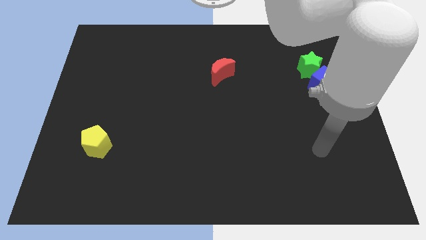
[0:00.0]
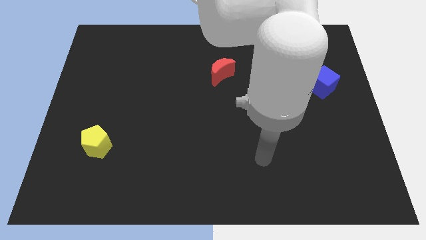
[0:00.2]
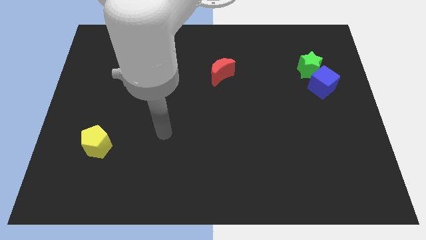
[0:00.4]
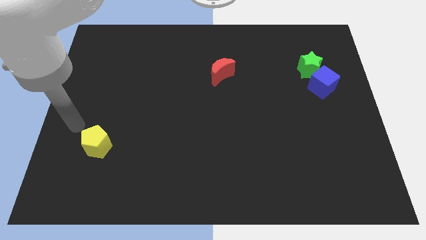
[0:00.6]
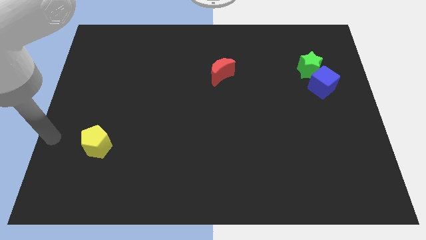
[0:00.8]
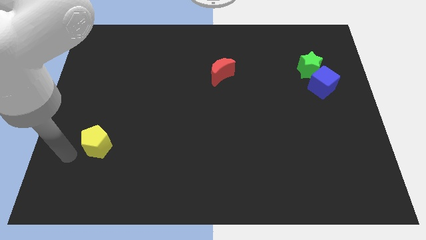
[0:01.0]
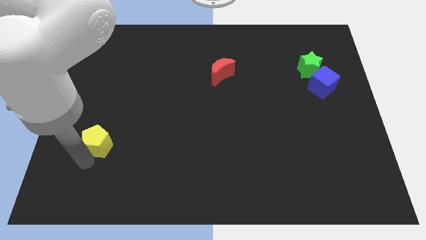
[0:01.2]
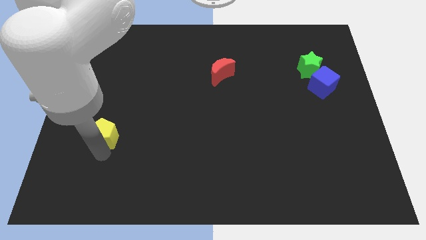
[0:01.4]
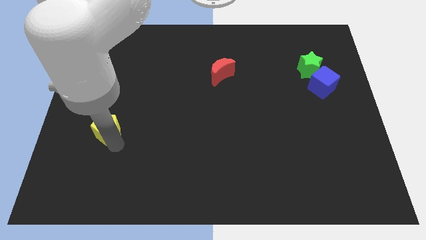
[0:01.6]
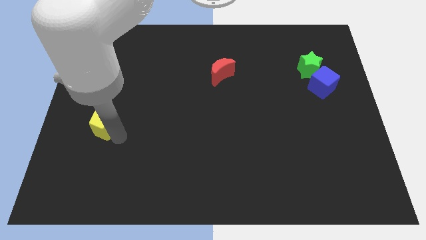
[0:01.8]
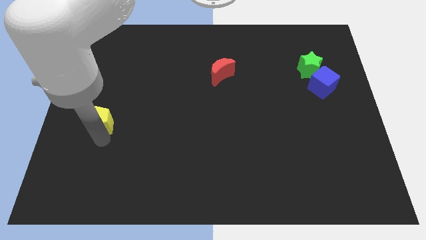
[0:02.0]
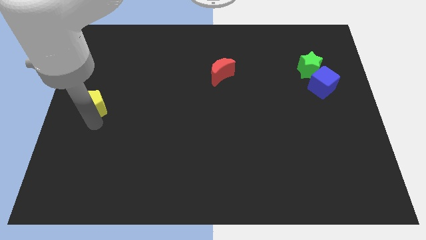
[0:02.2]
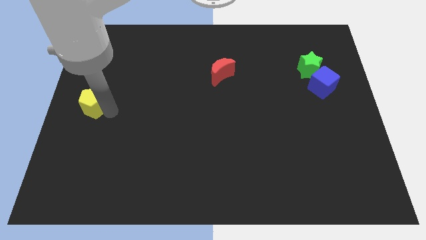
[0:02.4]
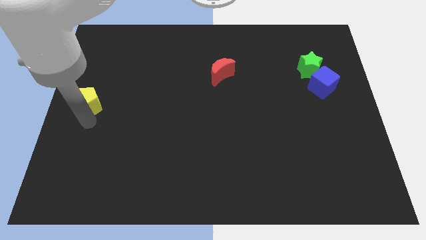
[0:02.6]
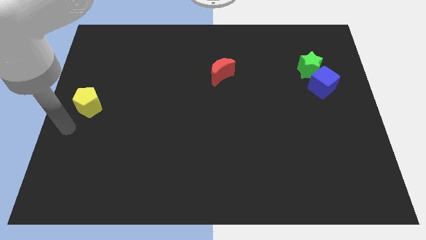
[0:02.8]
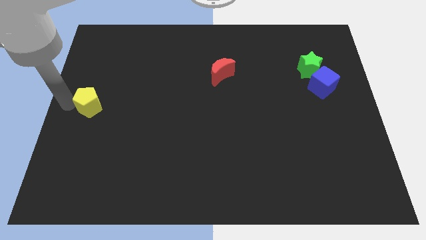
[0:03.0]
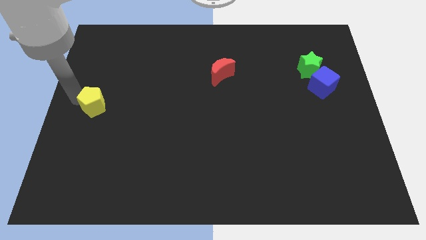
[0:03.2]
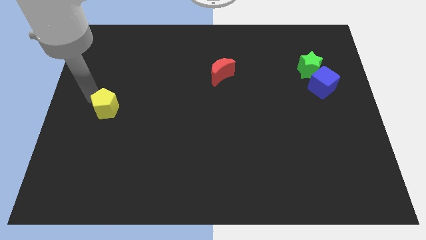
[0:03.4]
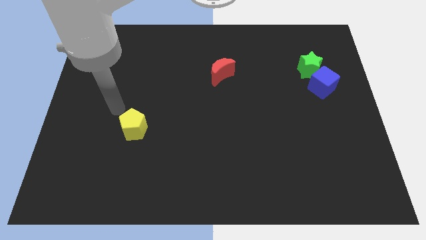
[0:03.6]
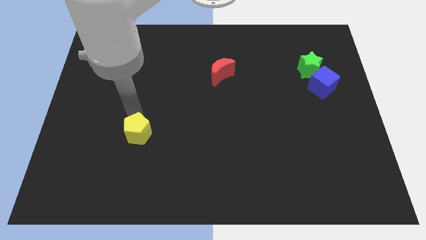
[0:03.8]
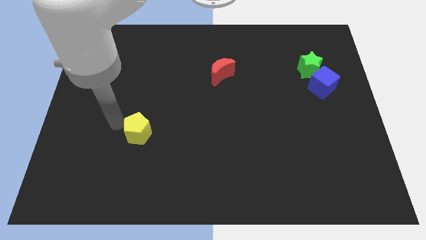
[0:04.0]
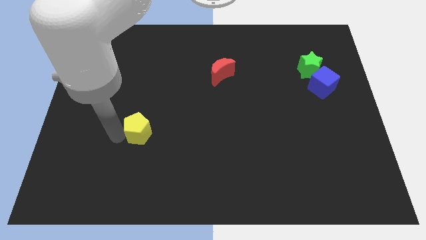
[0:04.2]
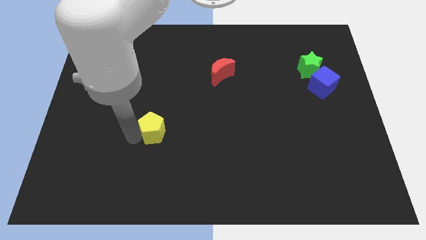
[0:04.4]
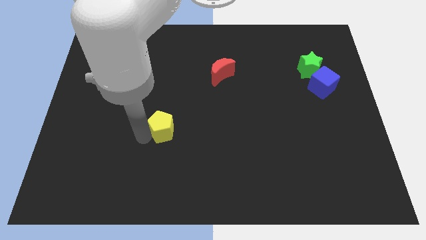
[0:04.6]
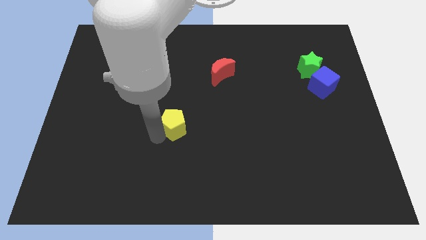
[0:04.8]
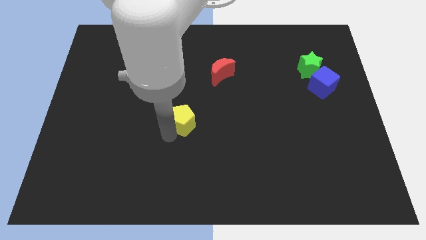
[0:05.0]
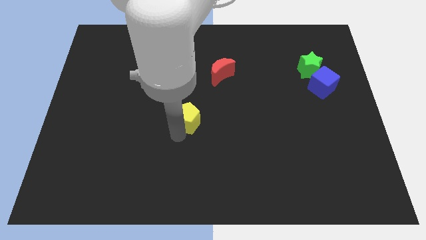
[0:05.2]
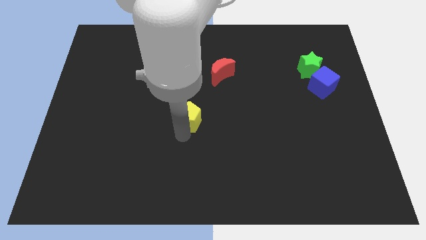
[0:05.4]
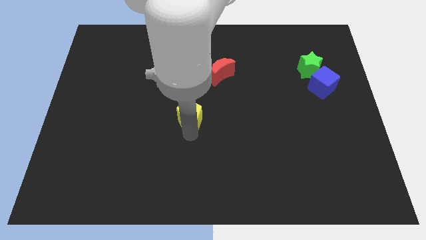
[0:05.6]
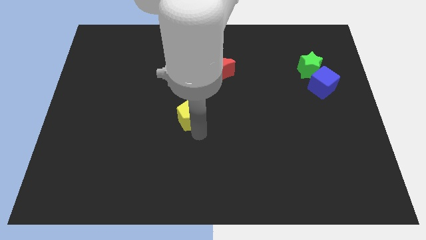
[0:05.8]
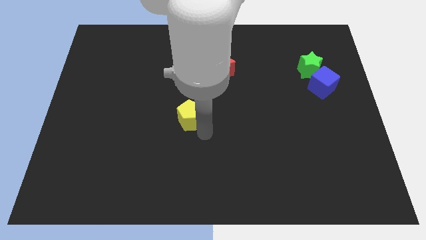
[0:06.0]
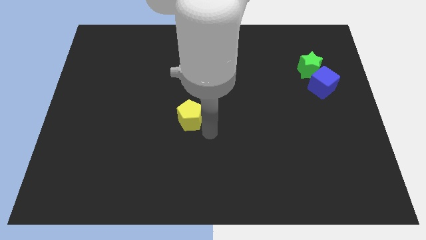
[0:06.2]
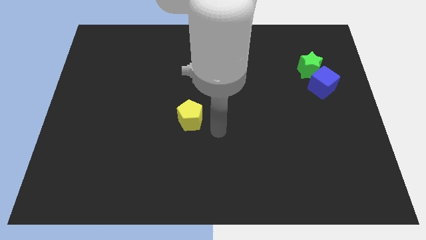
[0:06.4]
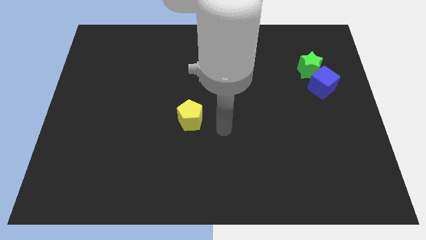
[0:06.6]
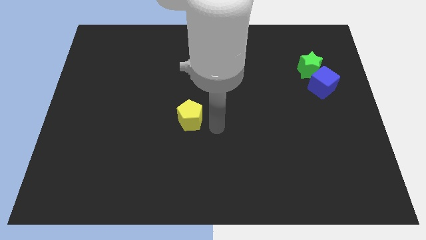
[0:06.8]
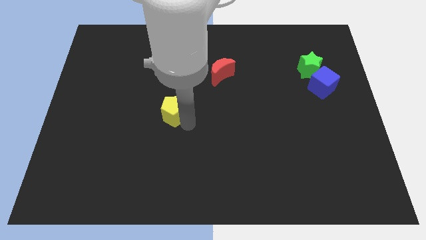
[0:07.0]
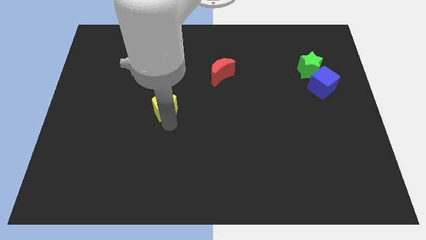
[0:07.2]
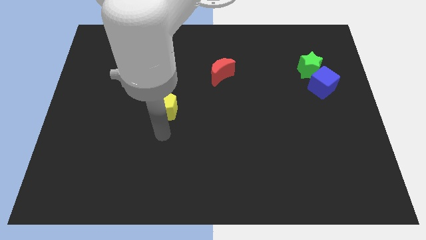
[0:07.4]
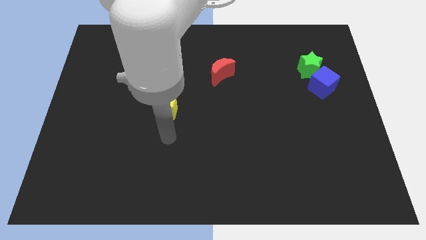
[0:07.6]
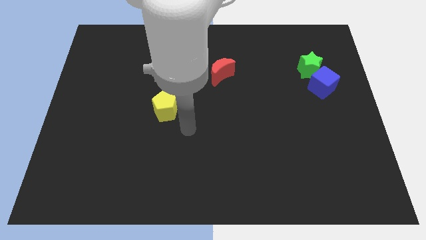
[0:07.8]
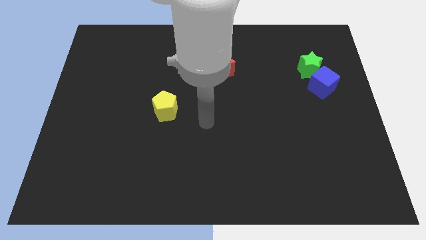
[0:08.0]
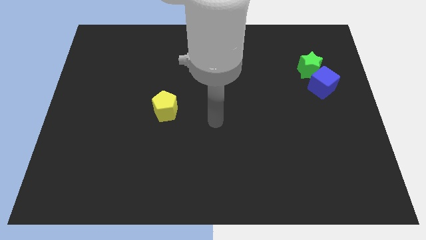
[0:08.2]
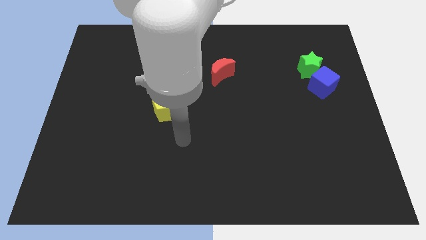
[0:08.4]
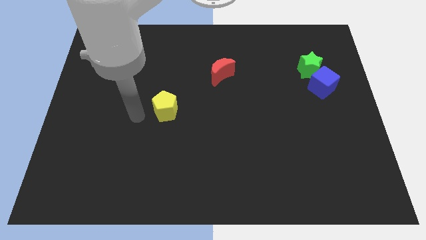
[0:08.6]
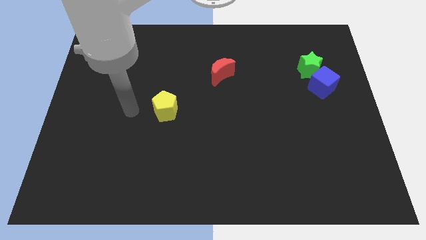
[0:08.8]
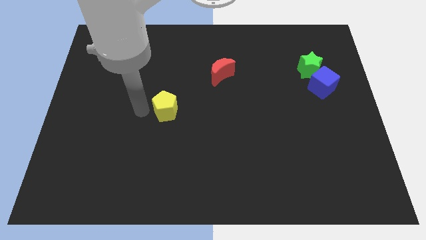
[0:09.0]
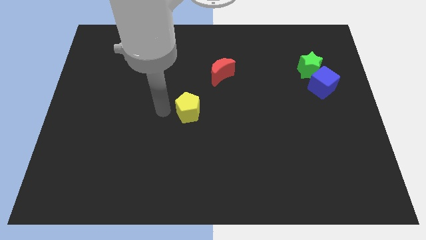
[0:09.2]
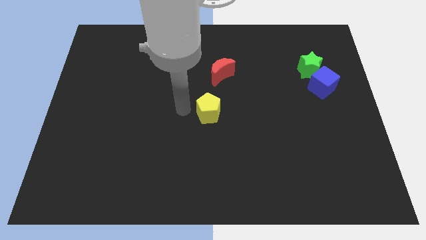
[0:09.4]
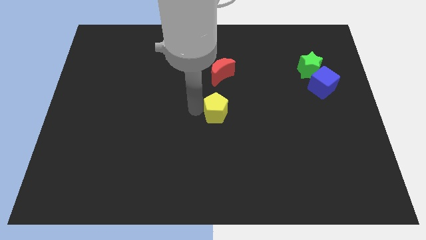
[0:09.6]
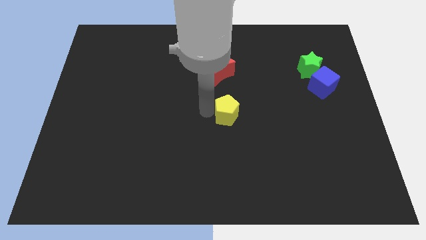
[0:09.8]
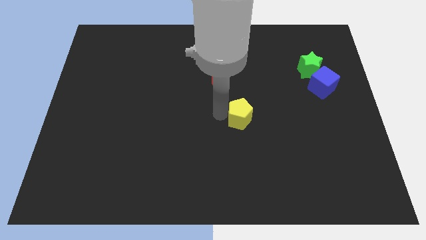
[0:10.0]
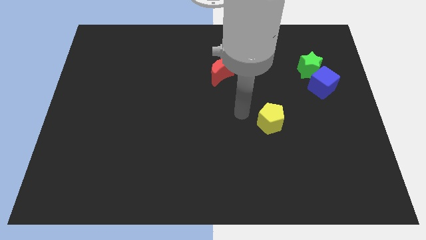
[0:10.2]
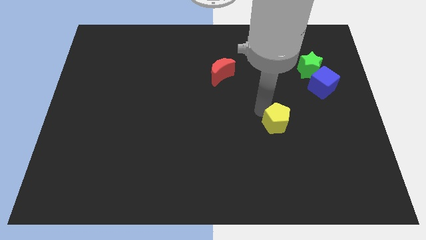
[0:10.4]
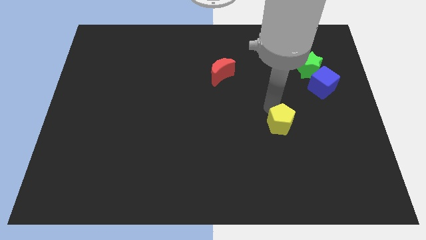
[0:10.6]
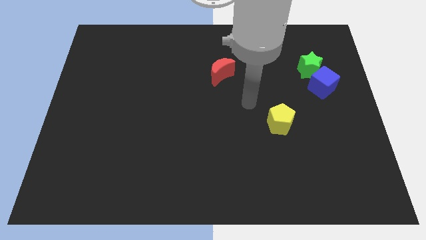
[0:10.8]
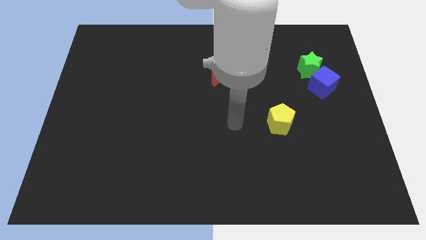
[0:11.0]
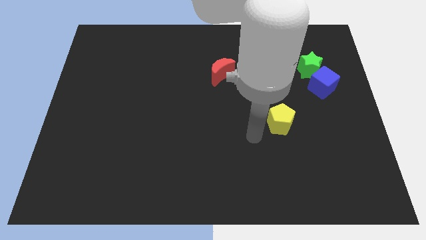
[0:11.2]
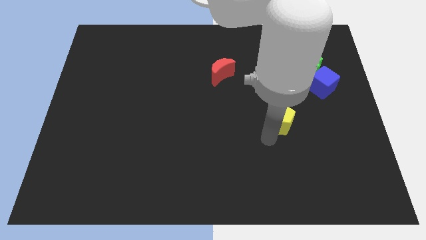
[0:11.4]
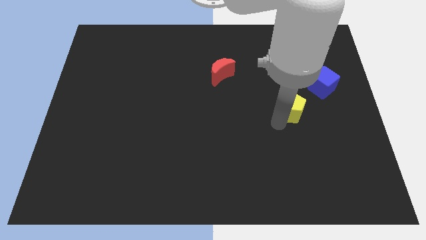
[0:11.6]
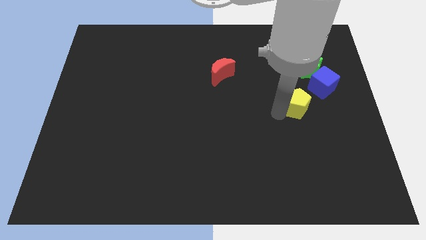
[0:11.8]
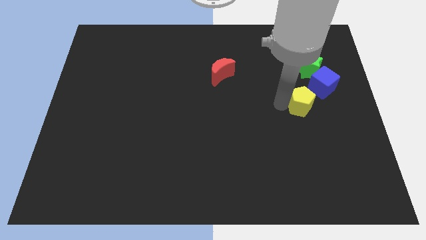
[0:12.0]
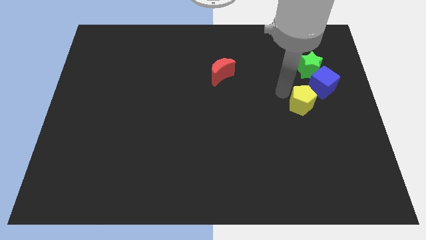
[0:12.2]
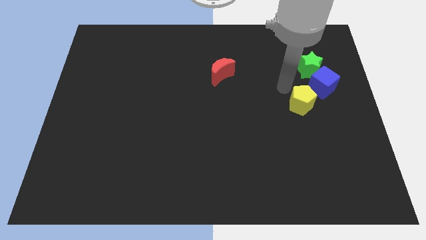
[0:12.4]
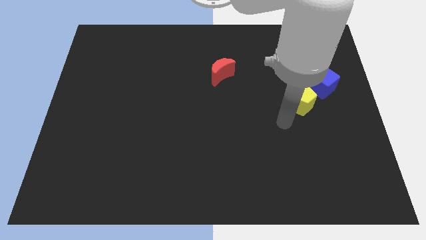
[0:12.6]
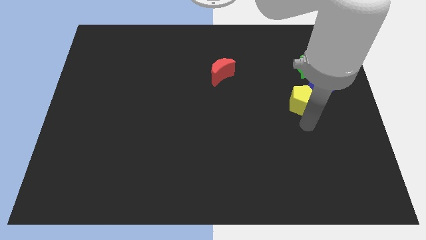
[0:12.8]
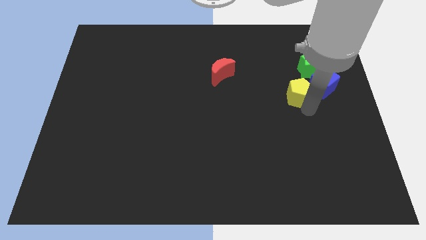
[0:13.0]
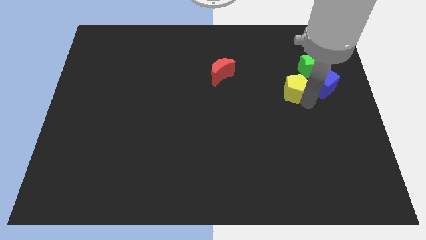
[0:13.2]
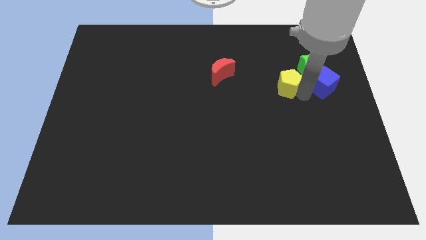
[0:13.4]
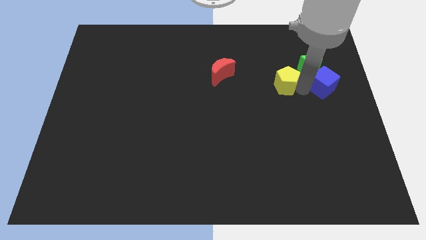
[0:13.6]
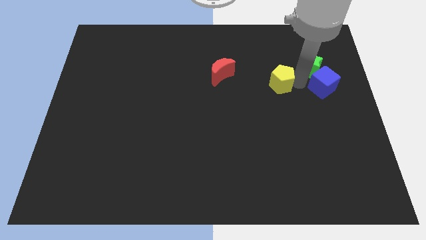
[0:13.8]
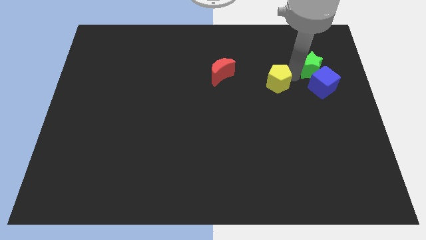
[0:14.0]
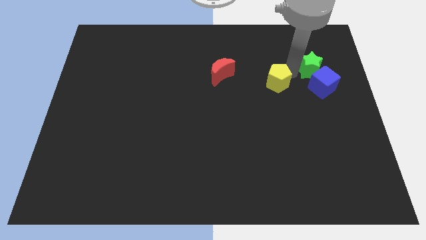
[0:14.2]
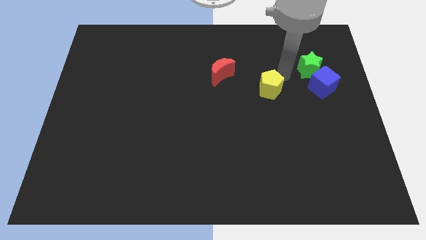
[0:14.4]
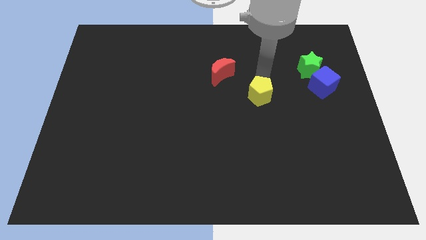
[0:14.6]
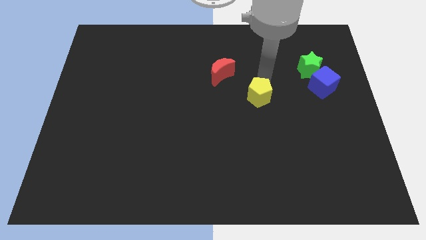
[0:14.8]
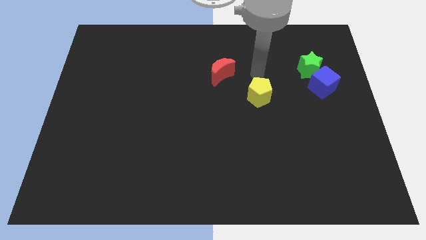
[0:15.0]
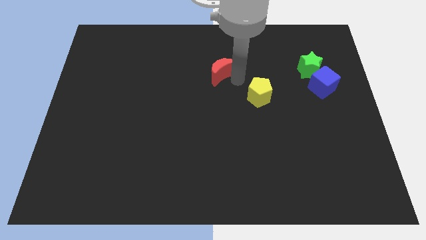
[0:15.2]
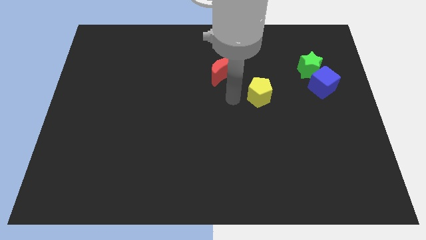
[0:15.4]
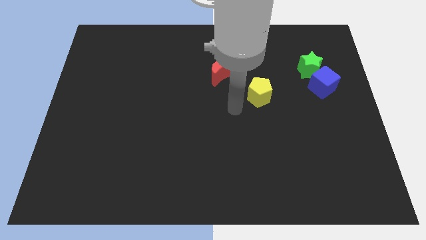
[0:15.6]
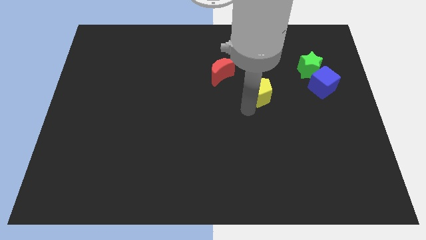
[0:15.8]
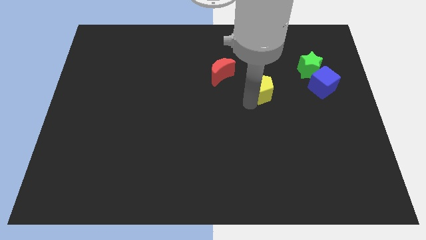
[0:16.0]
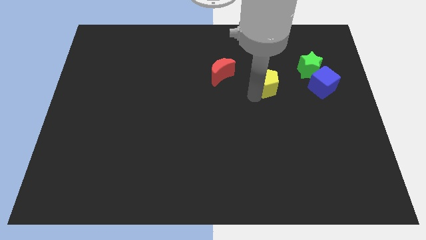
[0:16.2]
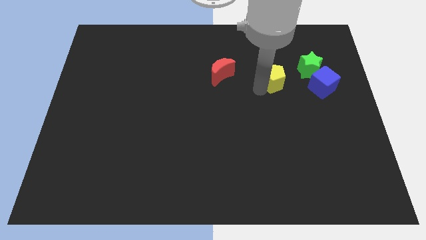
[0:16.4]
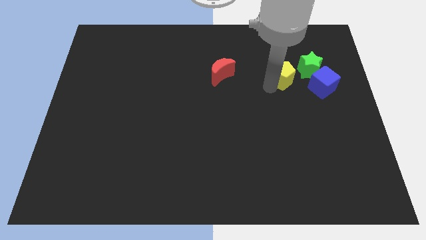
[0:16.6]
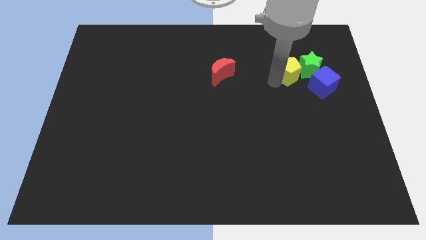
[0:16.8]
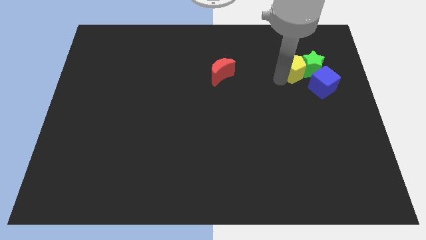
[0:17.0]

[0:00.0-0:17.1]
move the pentagon close to the green block
